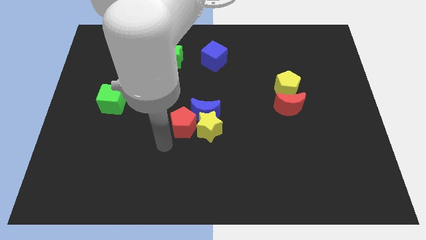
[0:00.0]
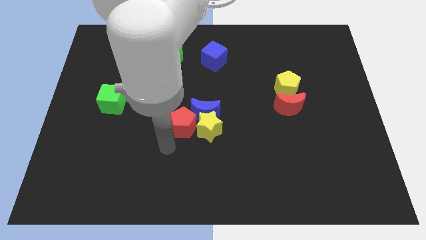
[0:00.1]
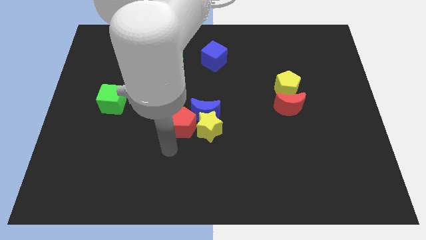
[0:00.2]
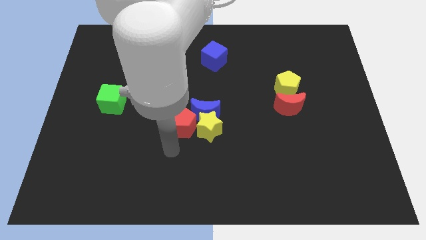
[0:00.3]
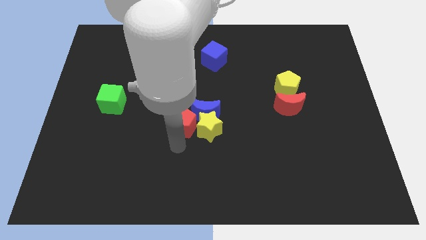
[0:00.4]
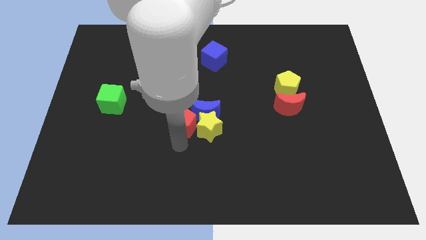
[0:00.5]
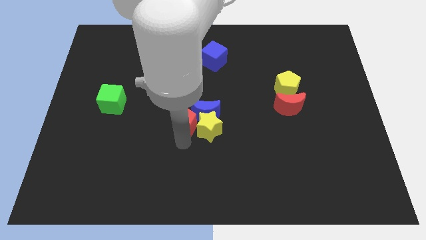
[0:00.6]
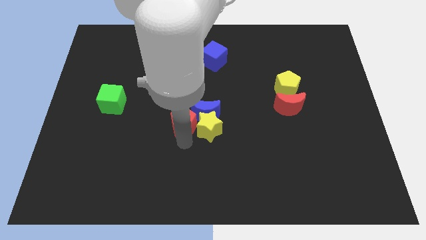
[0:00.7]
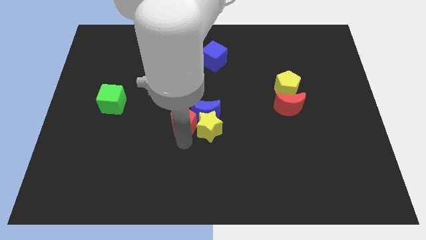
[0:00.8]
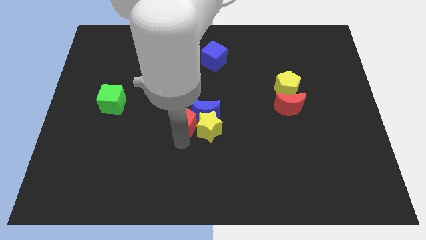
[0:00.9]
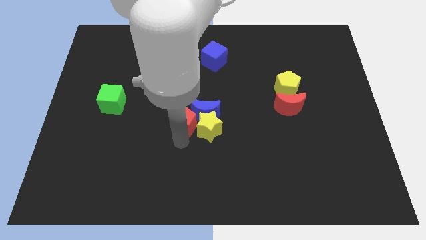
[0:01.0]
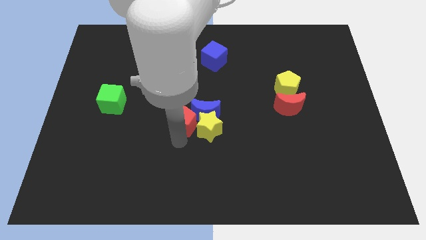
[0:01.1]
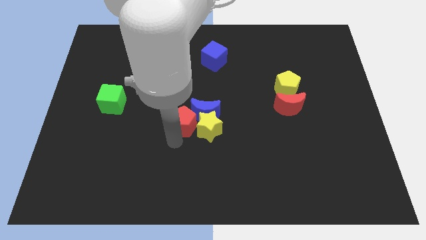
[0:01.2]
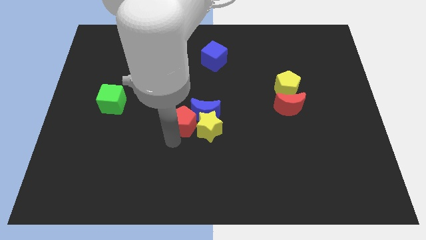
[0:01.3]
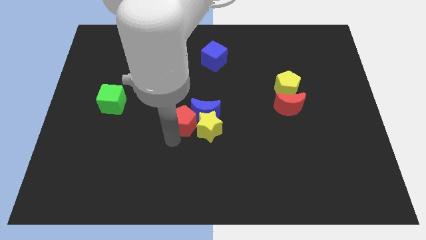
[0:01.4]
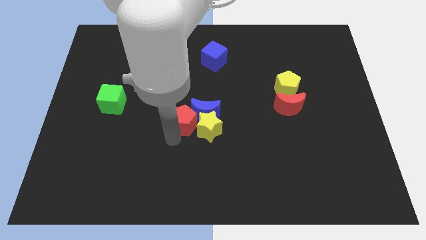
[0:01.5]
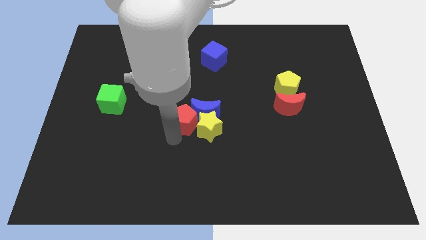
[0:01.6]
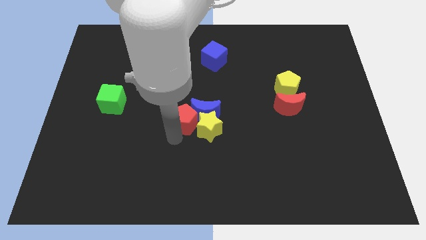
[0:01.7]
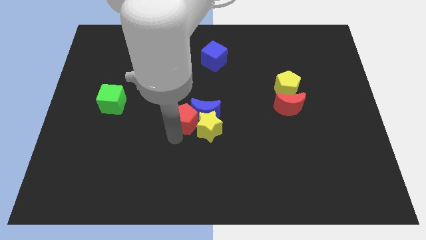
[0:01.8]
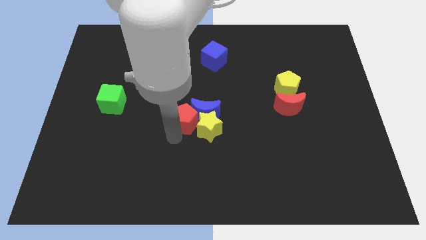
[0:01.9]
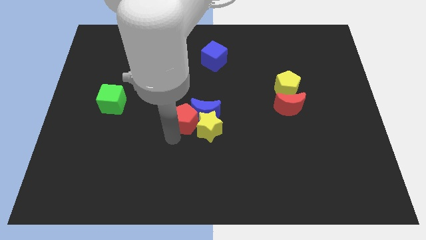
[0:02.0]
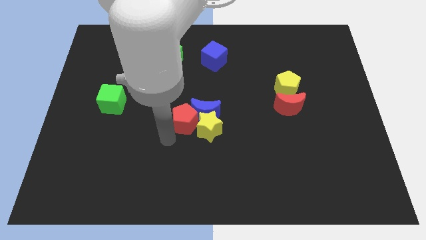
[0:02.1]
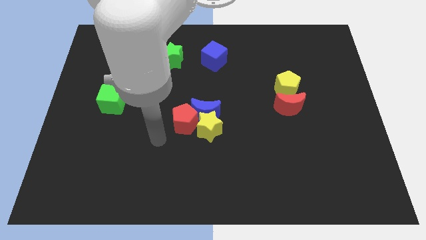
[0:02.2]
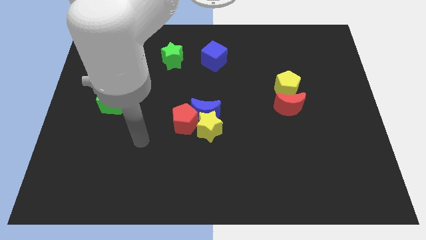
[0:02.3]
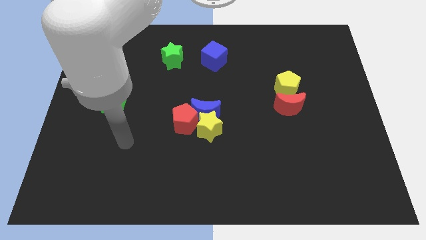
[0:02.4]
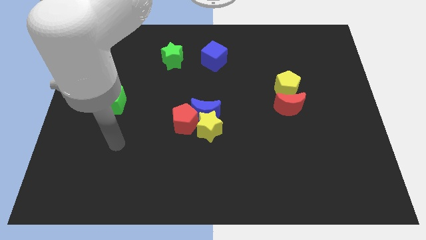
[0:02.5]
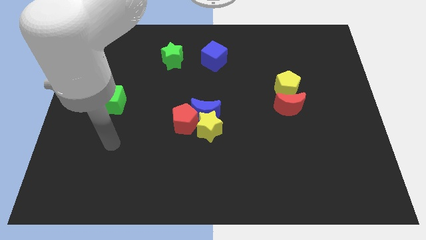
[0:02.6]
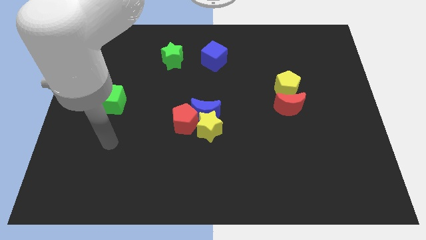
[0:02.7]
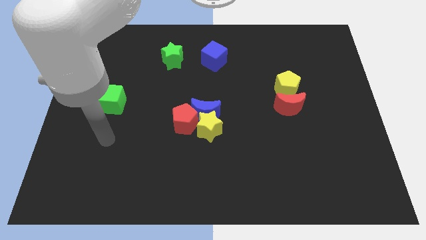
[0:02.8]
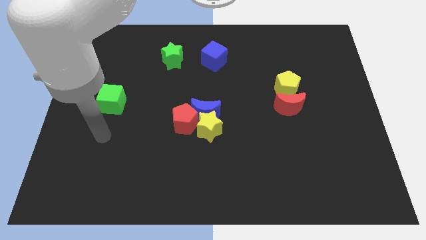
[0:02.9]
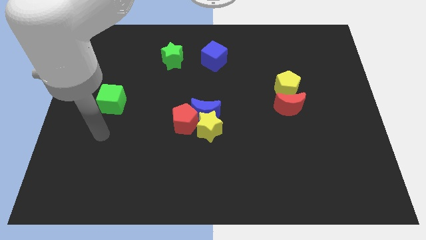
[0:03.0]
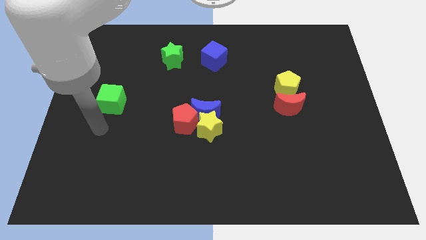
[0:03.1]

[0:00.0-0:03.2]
move red pentagon left beside the yellow star

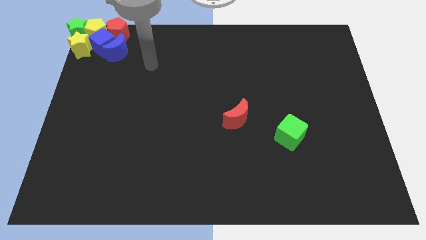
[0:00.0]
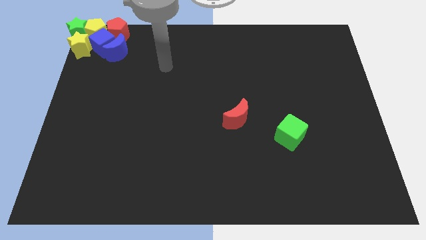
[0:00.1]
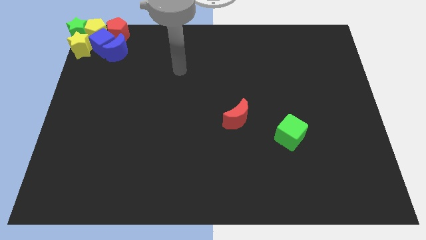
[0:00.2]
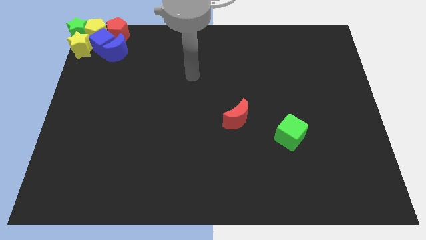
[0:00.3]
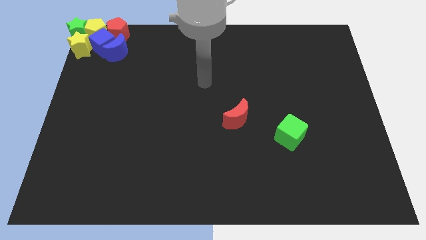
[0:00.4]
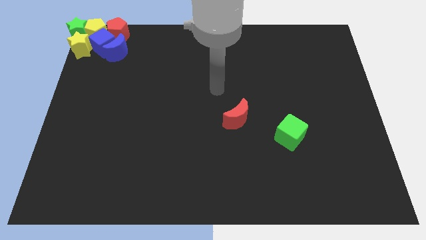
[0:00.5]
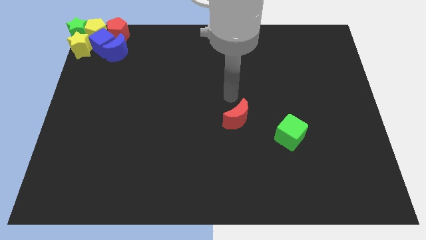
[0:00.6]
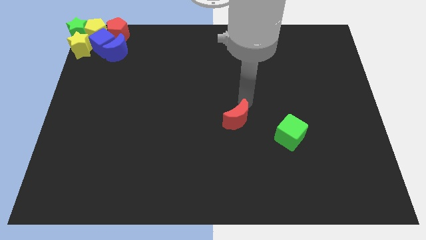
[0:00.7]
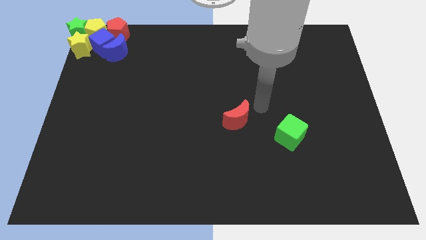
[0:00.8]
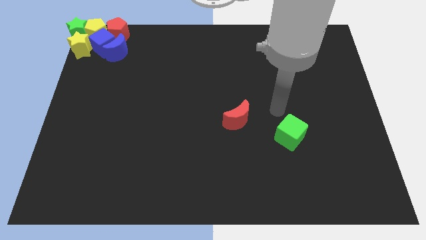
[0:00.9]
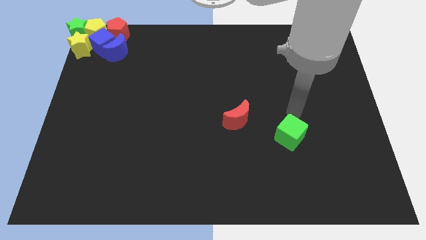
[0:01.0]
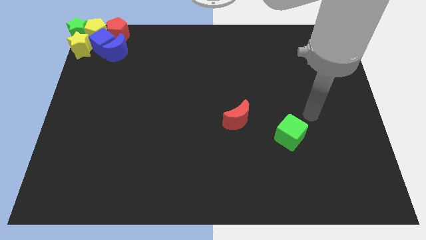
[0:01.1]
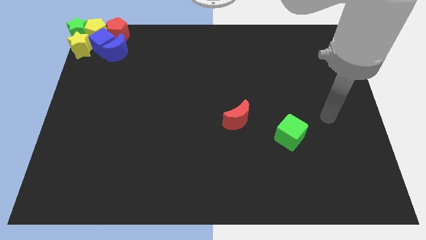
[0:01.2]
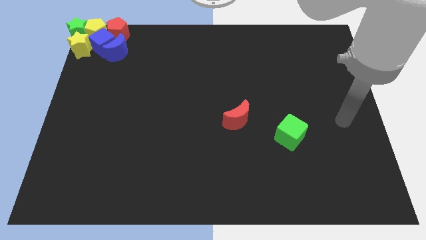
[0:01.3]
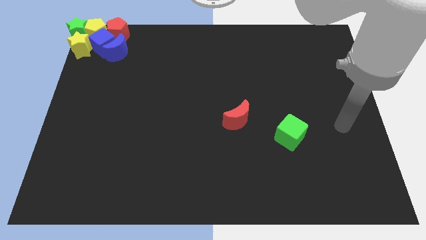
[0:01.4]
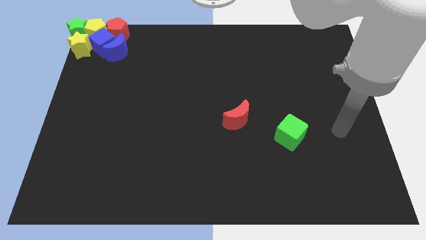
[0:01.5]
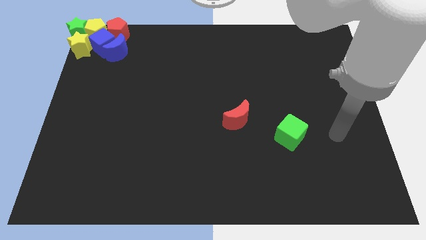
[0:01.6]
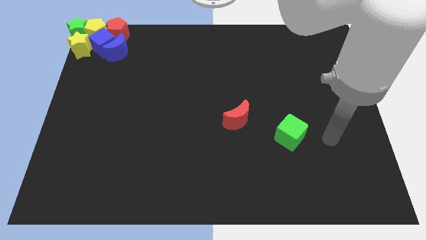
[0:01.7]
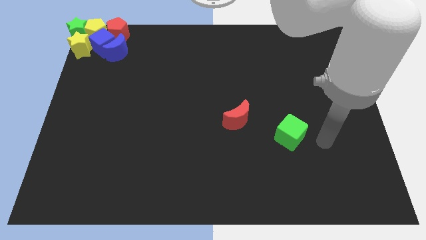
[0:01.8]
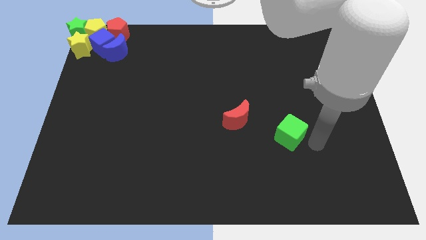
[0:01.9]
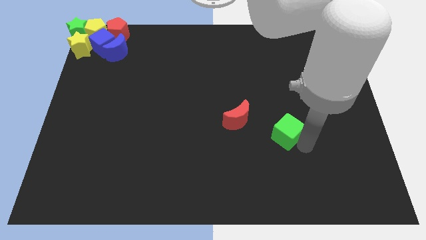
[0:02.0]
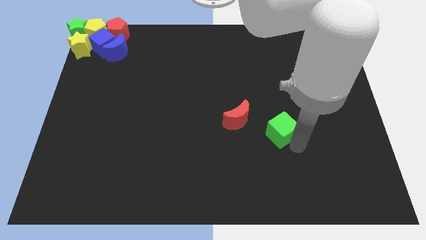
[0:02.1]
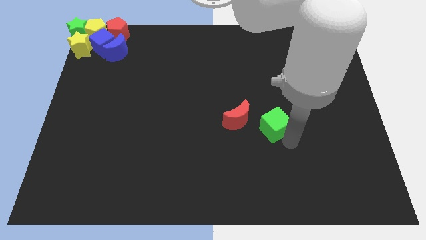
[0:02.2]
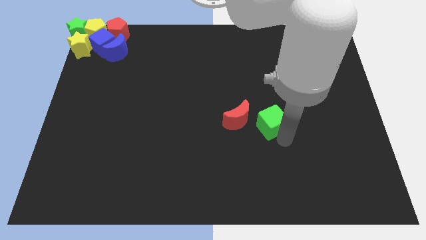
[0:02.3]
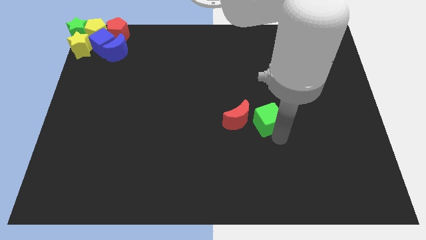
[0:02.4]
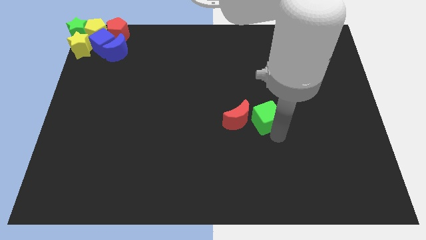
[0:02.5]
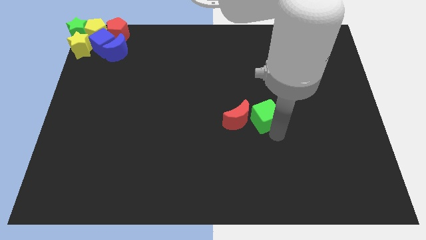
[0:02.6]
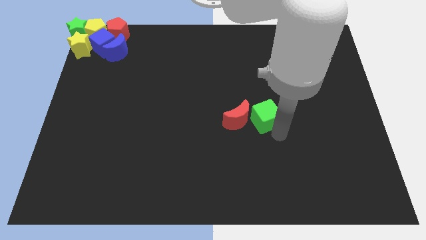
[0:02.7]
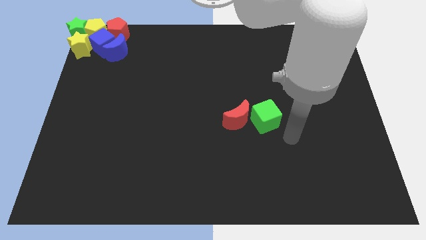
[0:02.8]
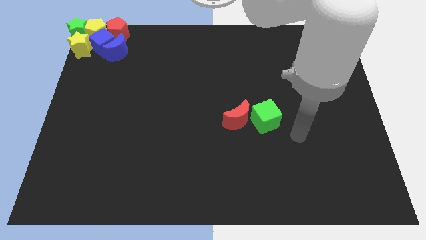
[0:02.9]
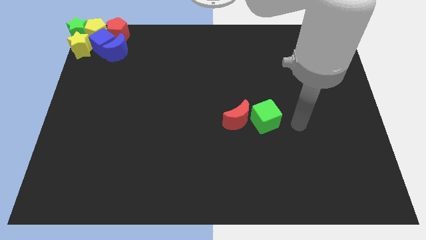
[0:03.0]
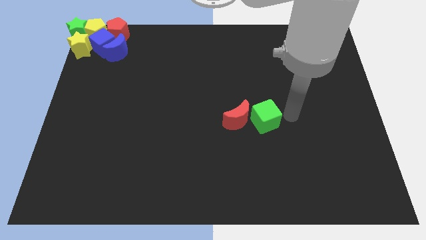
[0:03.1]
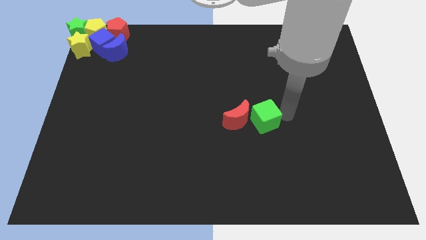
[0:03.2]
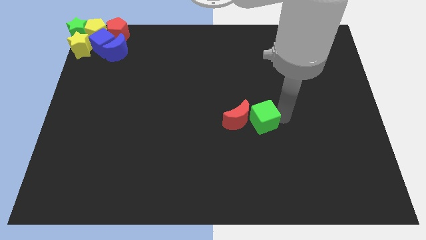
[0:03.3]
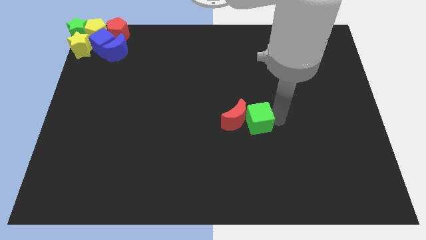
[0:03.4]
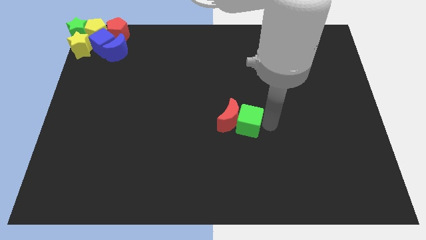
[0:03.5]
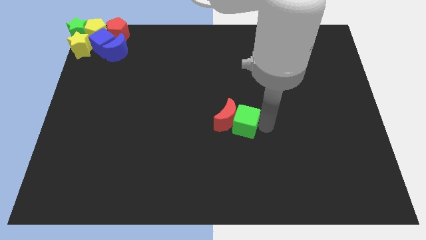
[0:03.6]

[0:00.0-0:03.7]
move the green cube into the right side of the red crescent

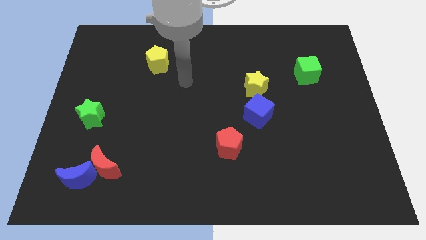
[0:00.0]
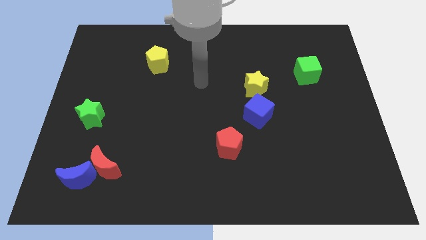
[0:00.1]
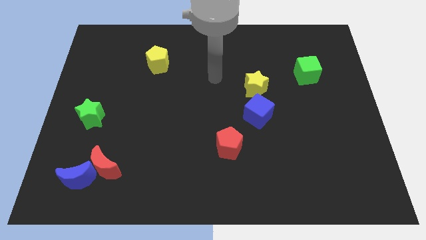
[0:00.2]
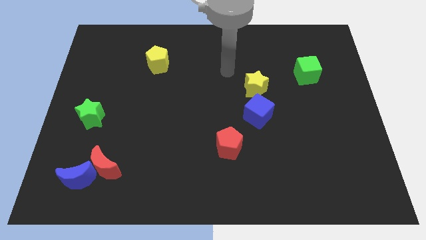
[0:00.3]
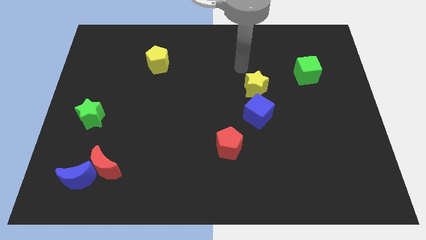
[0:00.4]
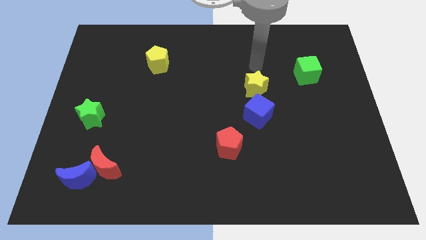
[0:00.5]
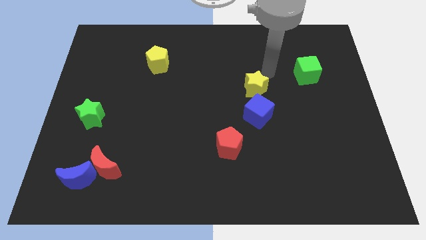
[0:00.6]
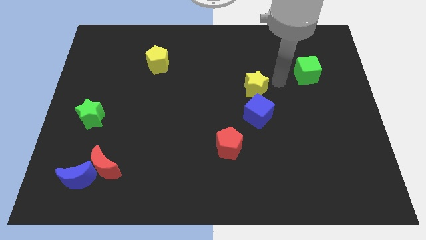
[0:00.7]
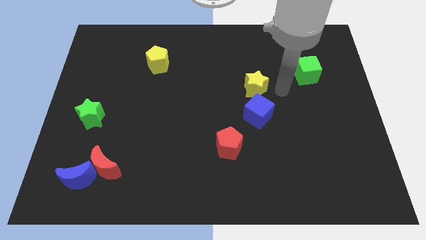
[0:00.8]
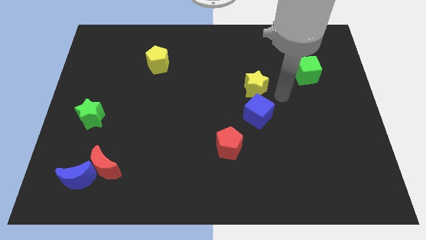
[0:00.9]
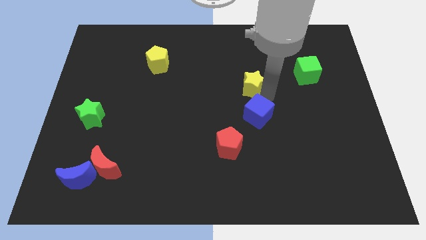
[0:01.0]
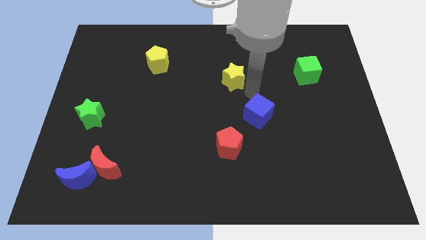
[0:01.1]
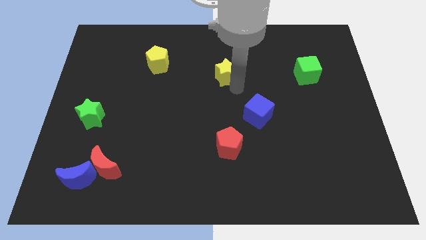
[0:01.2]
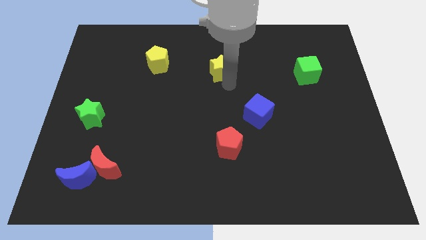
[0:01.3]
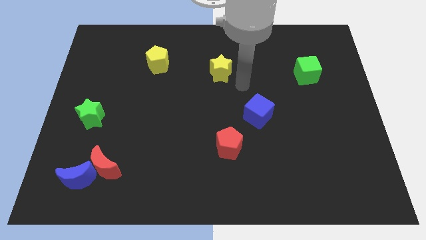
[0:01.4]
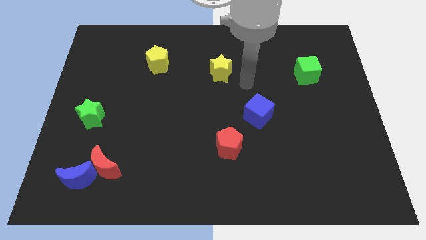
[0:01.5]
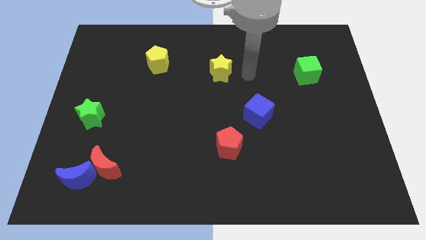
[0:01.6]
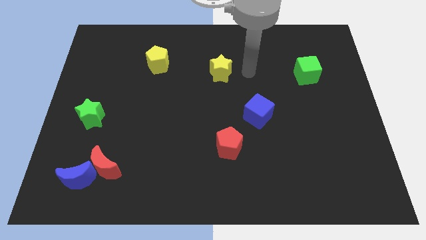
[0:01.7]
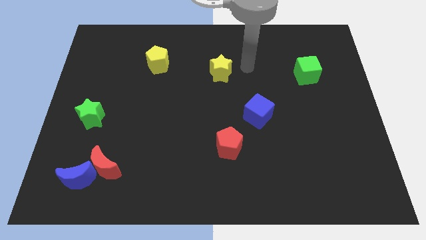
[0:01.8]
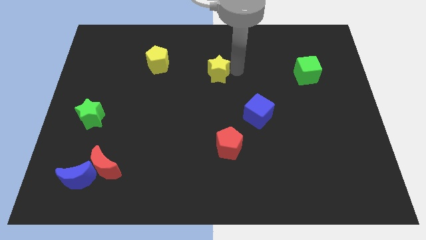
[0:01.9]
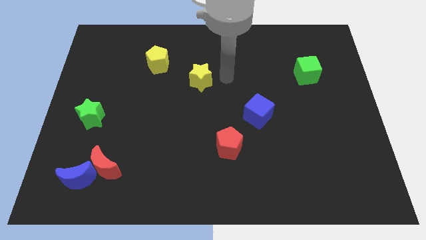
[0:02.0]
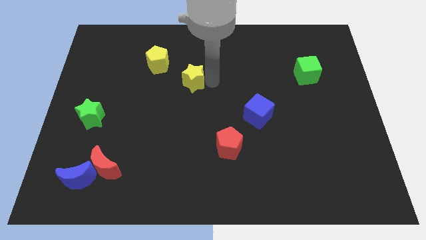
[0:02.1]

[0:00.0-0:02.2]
move the yellow star towards the yellow pentagon
